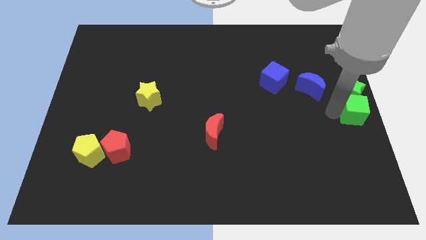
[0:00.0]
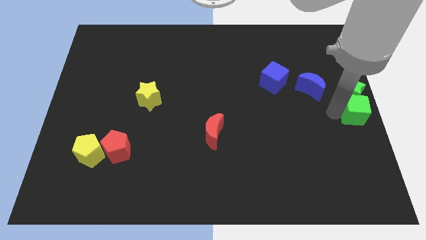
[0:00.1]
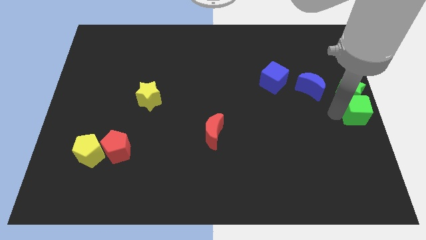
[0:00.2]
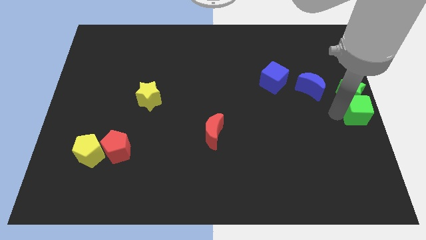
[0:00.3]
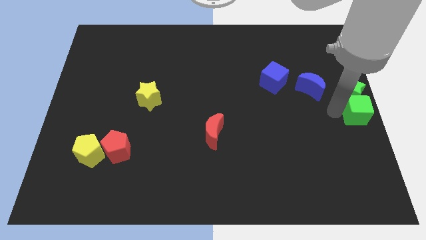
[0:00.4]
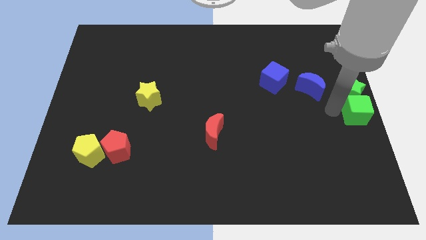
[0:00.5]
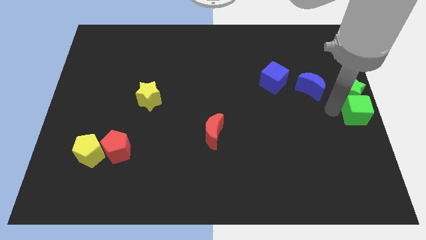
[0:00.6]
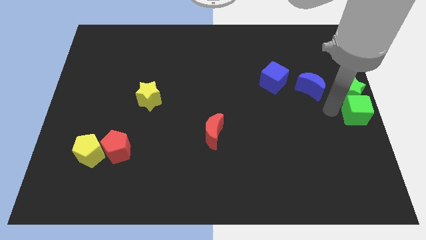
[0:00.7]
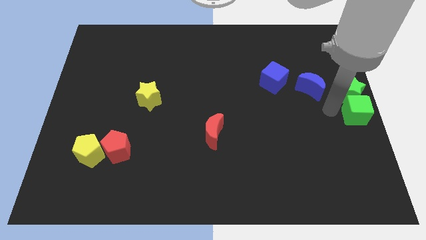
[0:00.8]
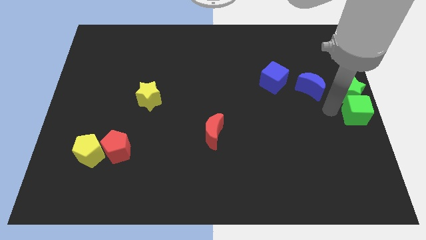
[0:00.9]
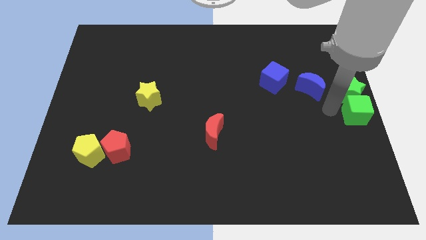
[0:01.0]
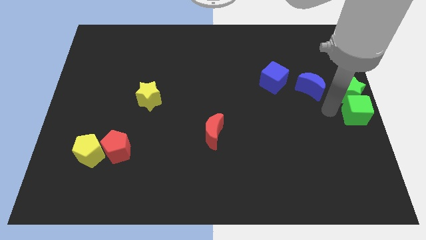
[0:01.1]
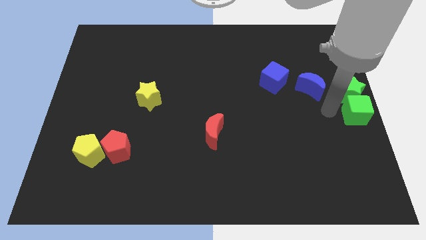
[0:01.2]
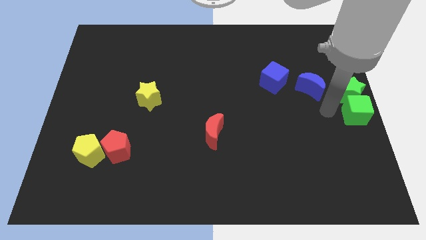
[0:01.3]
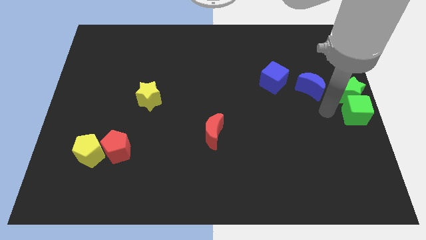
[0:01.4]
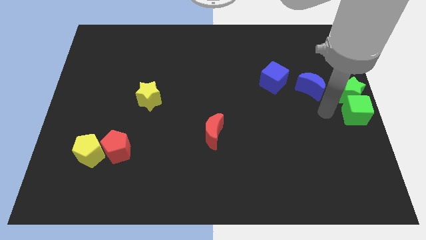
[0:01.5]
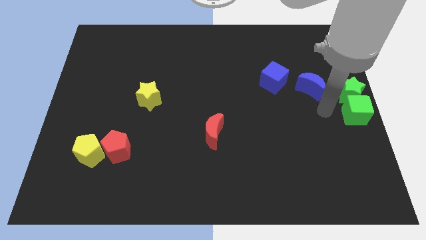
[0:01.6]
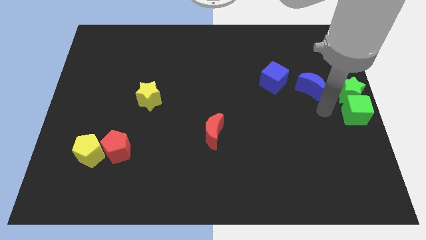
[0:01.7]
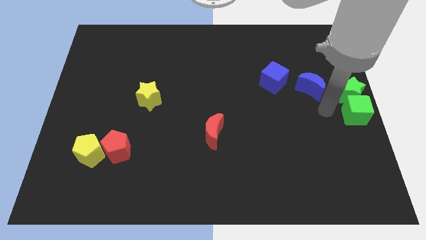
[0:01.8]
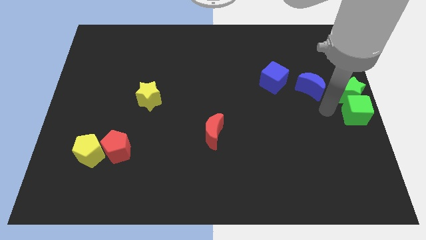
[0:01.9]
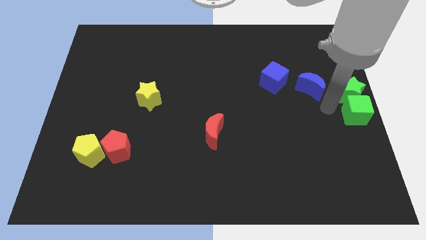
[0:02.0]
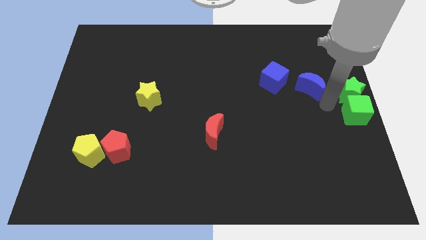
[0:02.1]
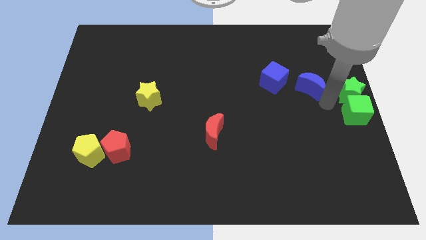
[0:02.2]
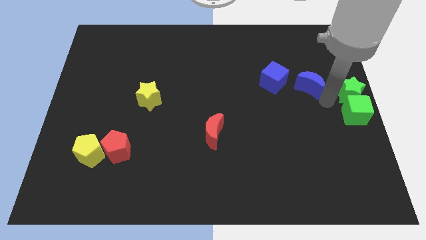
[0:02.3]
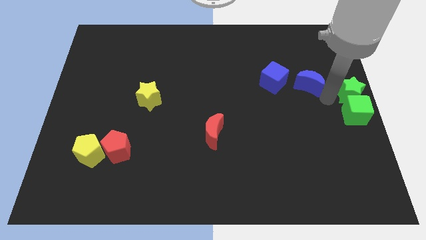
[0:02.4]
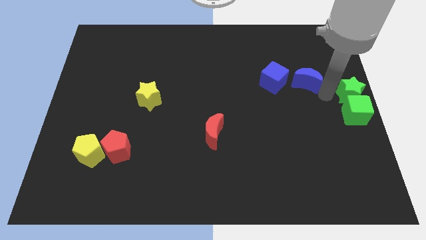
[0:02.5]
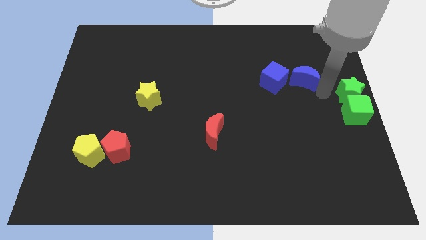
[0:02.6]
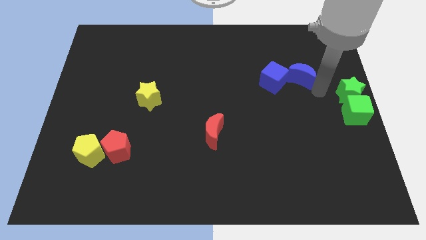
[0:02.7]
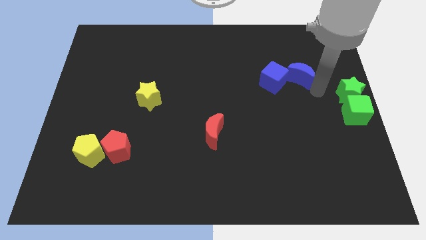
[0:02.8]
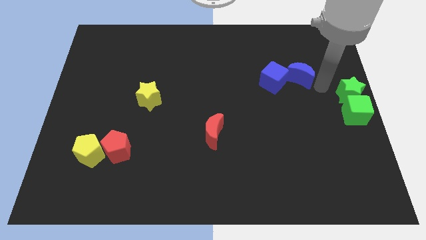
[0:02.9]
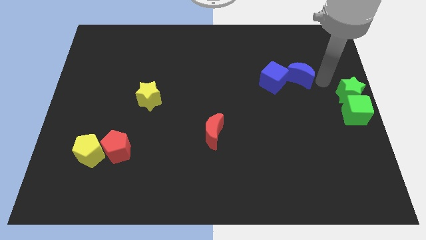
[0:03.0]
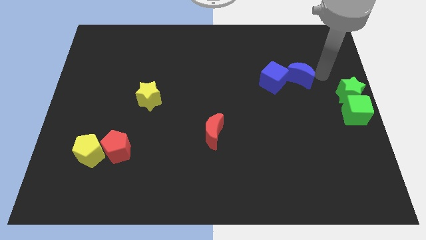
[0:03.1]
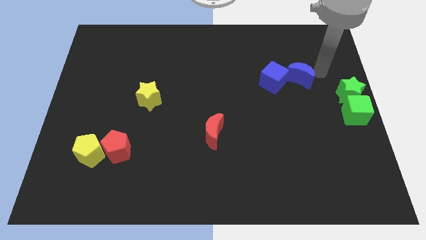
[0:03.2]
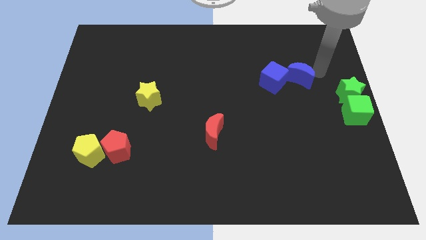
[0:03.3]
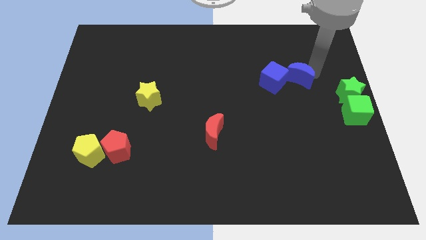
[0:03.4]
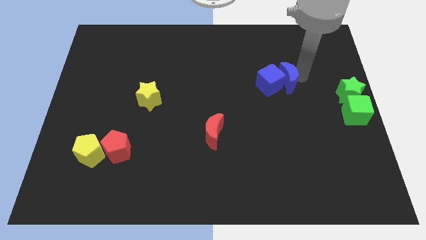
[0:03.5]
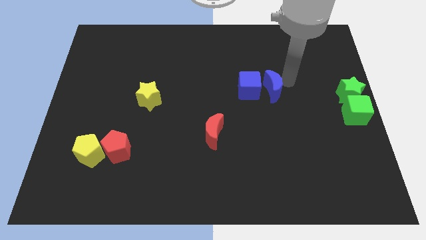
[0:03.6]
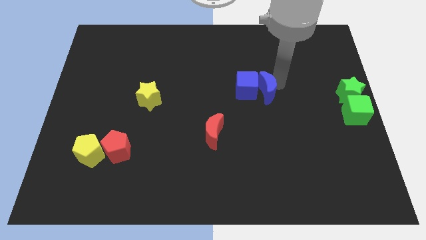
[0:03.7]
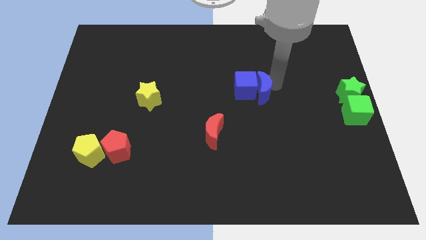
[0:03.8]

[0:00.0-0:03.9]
move the blue moon into the blue cube

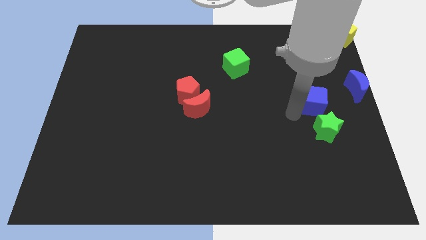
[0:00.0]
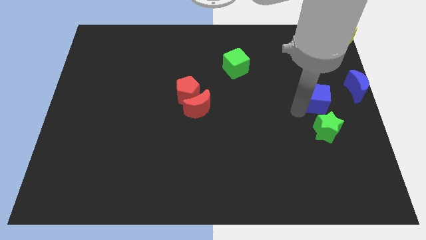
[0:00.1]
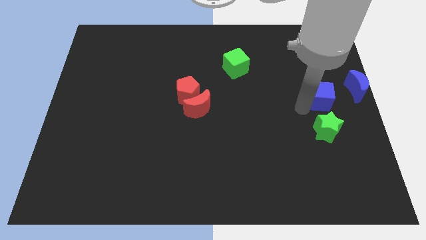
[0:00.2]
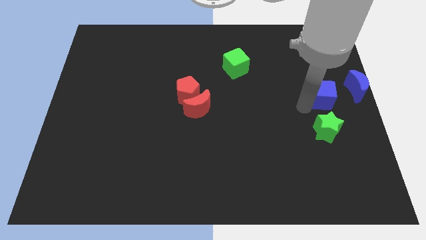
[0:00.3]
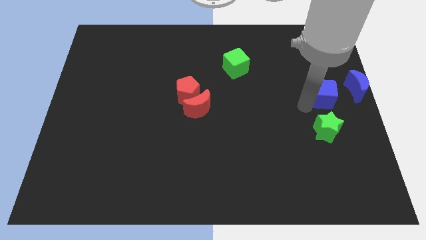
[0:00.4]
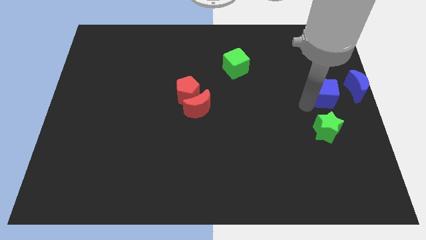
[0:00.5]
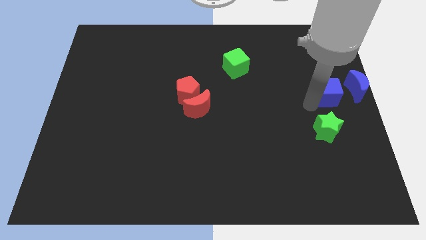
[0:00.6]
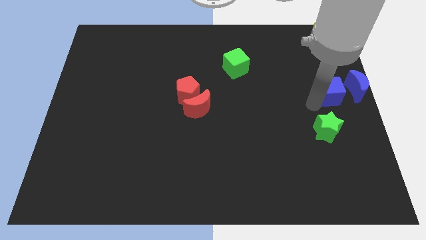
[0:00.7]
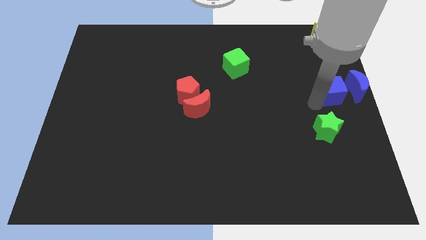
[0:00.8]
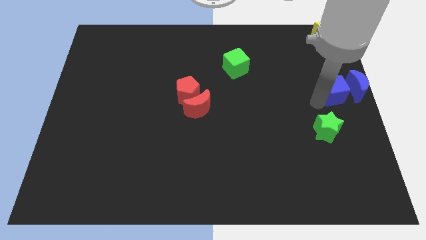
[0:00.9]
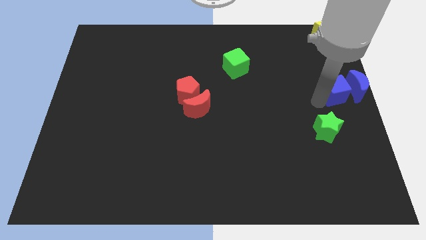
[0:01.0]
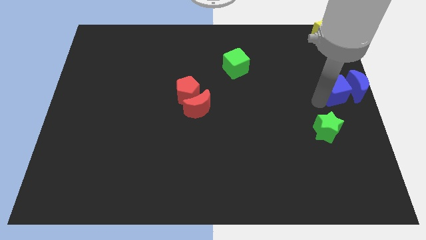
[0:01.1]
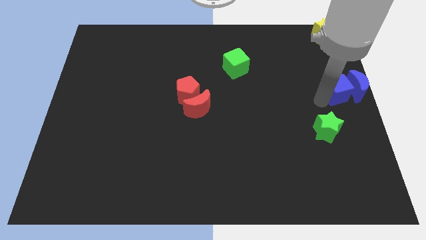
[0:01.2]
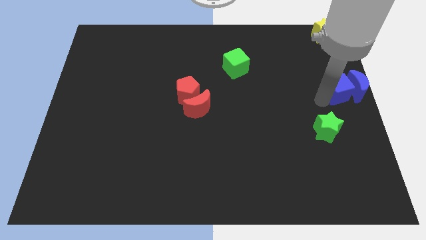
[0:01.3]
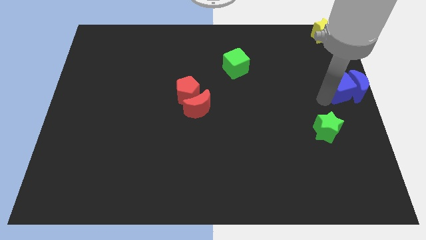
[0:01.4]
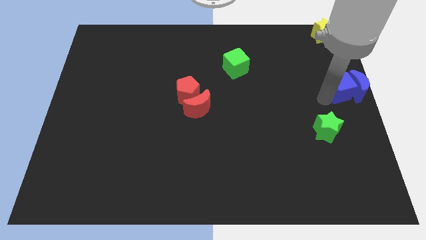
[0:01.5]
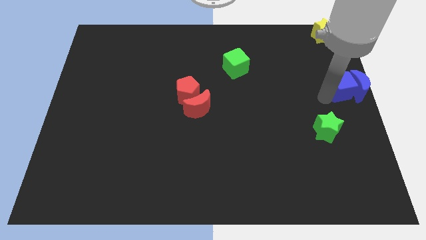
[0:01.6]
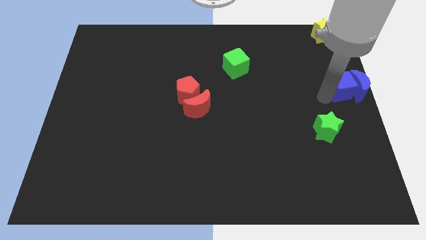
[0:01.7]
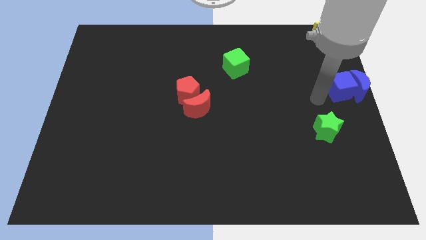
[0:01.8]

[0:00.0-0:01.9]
move the blue cube to the left side of the blue moon

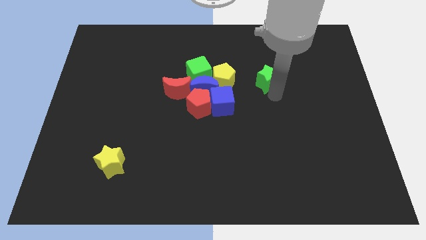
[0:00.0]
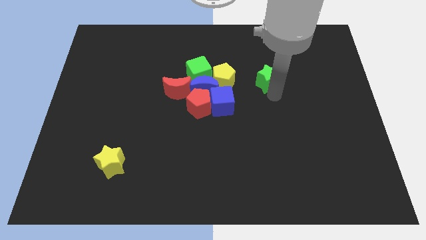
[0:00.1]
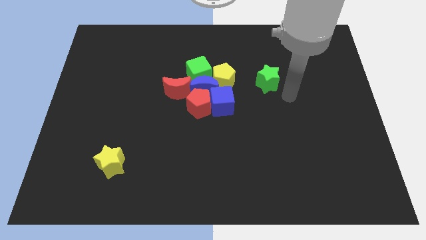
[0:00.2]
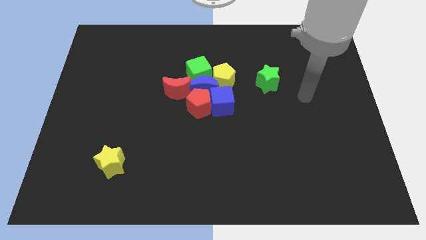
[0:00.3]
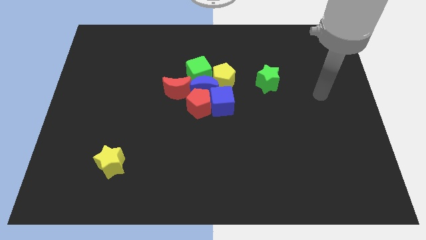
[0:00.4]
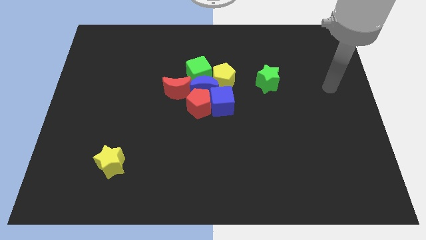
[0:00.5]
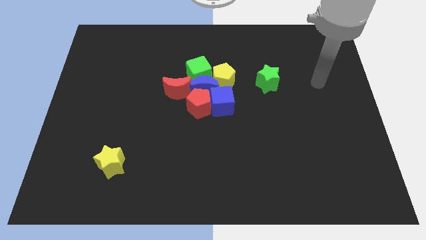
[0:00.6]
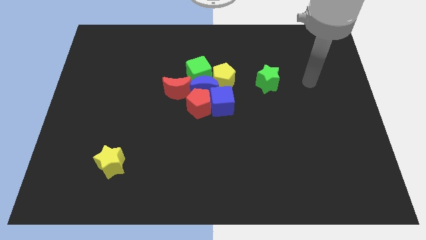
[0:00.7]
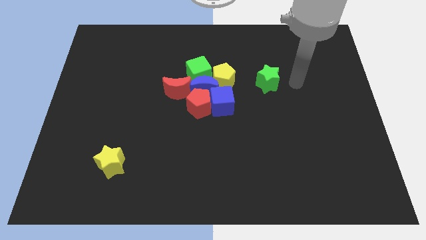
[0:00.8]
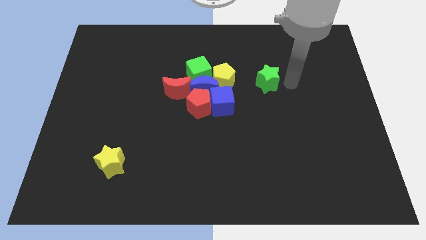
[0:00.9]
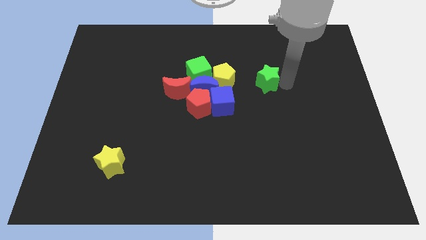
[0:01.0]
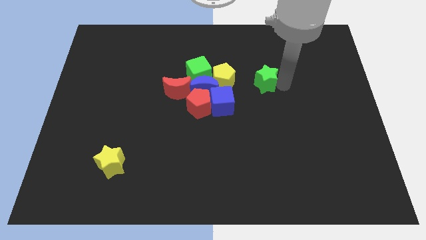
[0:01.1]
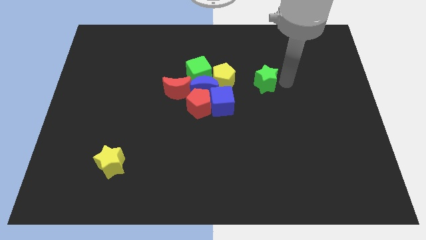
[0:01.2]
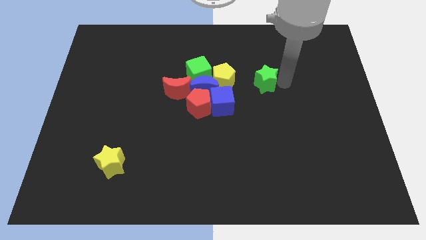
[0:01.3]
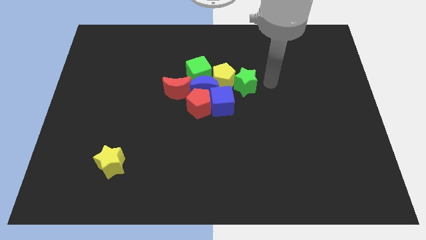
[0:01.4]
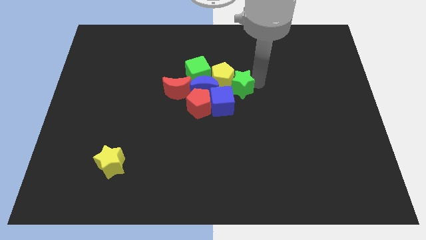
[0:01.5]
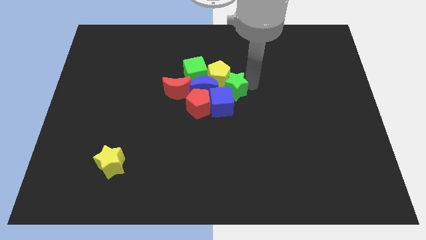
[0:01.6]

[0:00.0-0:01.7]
place a green star near the yellow pentagon

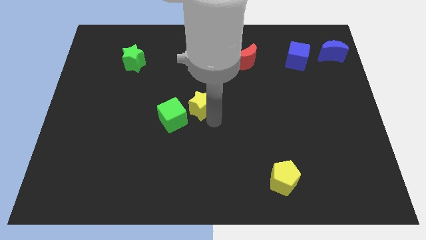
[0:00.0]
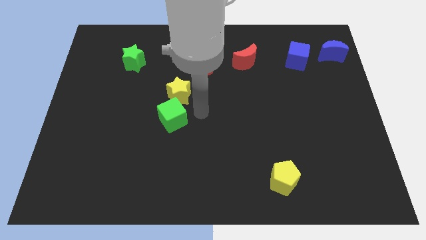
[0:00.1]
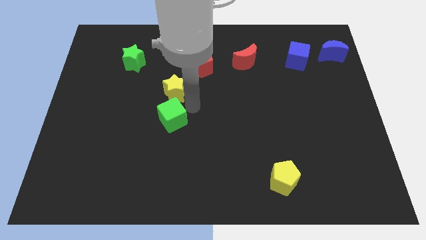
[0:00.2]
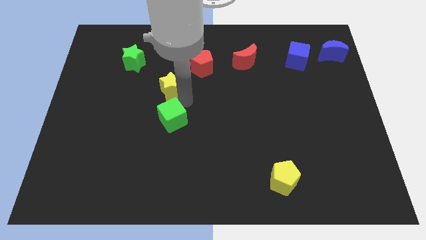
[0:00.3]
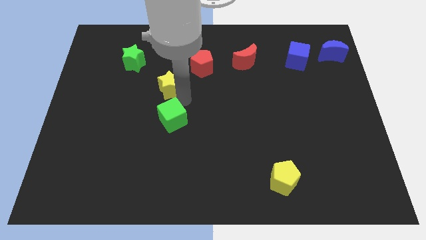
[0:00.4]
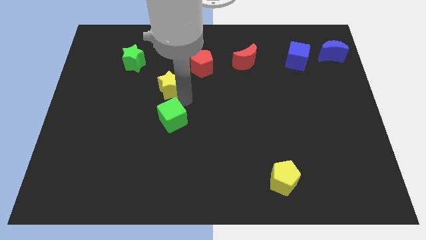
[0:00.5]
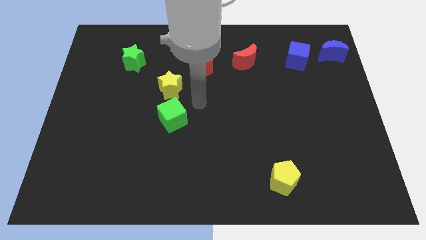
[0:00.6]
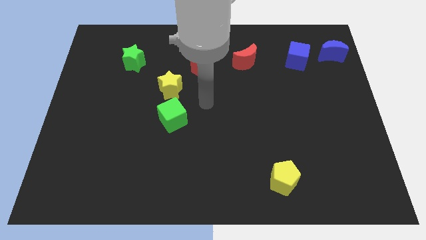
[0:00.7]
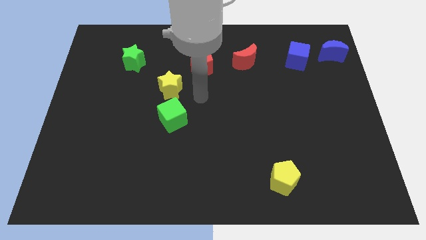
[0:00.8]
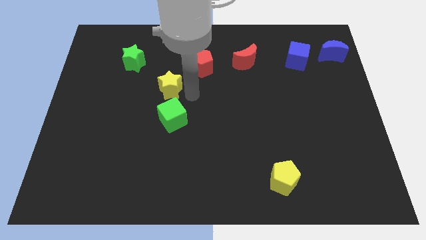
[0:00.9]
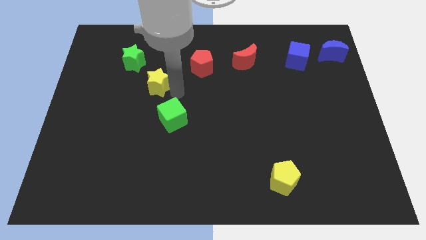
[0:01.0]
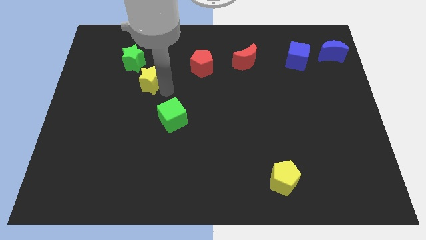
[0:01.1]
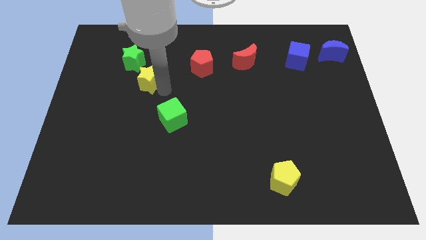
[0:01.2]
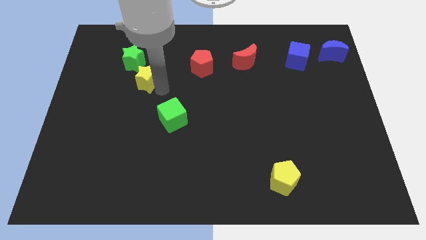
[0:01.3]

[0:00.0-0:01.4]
move the yellow star towards the bottom side of the green star
